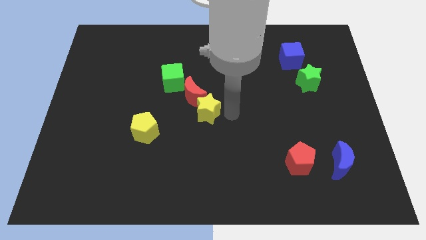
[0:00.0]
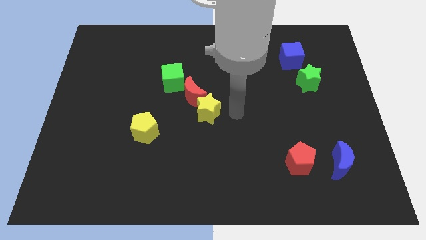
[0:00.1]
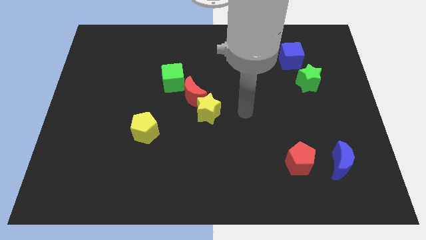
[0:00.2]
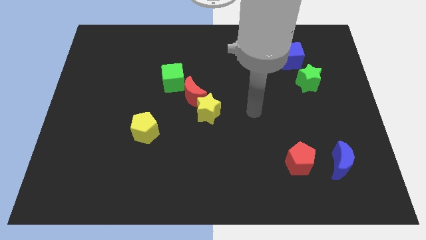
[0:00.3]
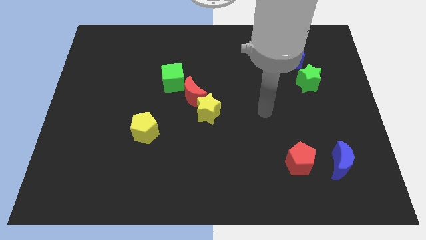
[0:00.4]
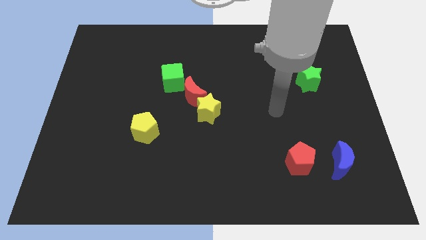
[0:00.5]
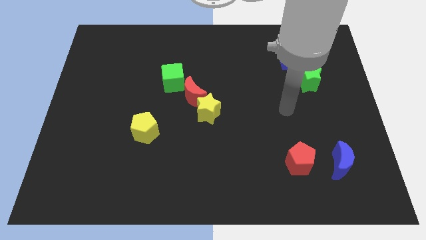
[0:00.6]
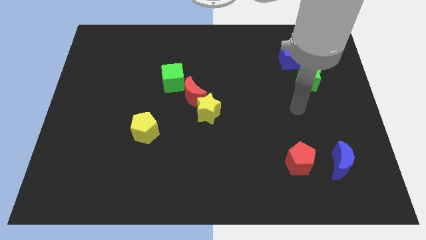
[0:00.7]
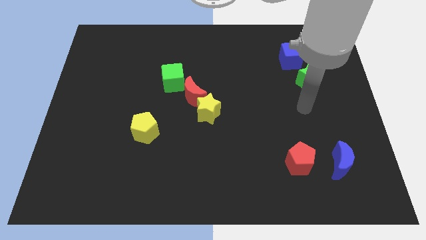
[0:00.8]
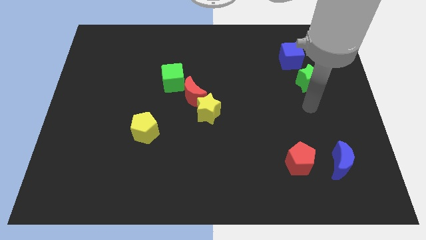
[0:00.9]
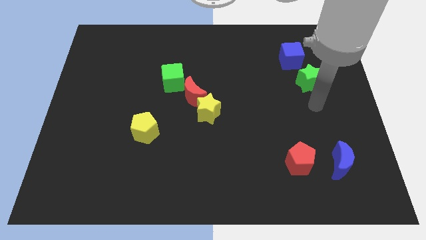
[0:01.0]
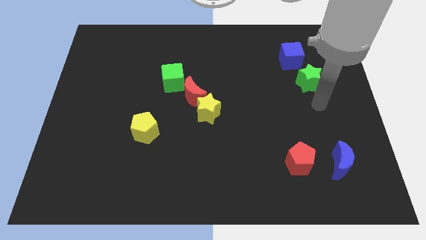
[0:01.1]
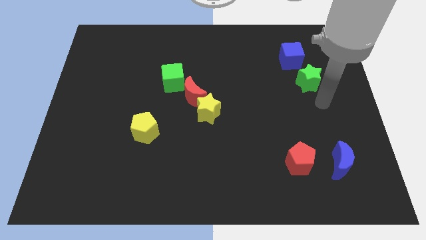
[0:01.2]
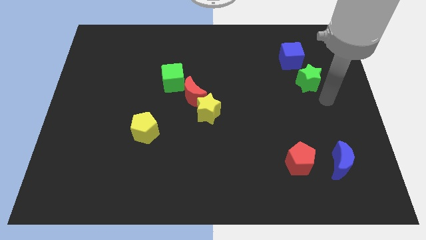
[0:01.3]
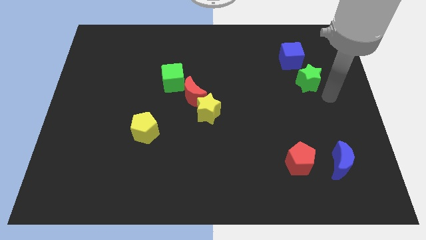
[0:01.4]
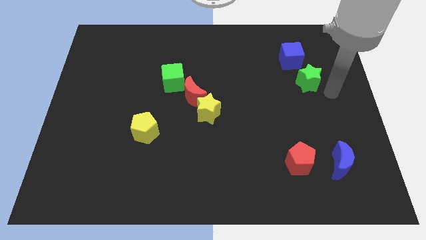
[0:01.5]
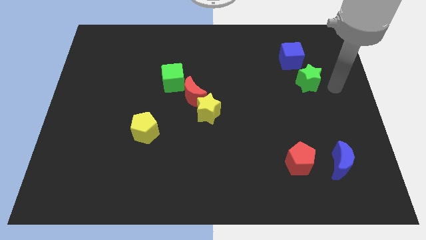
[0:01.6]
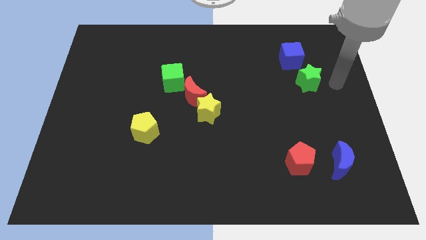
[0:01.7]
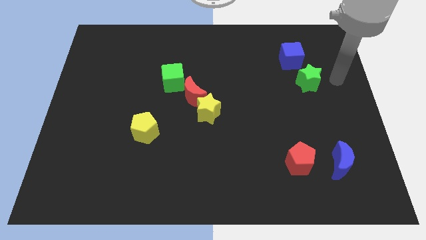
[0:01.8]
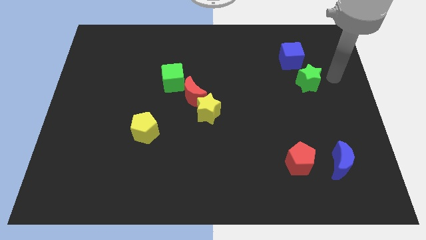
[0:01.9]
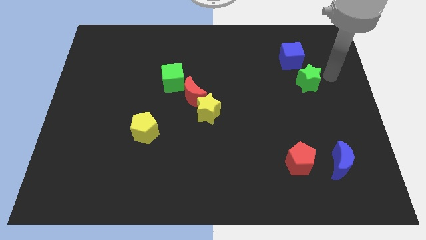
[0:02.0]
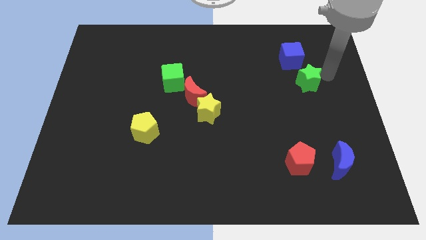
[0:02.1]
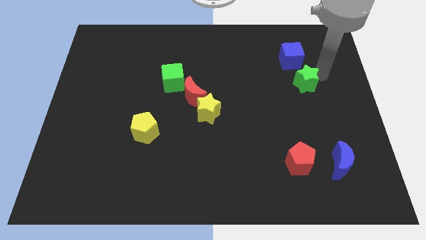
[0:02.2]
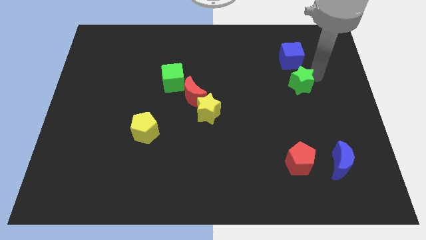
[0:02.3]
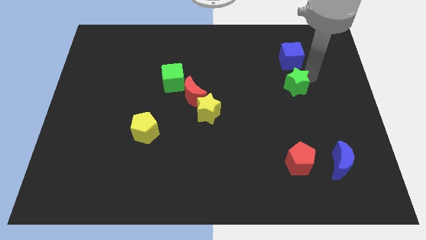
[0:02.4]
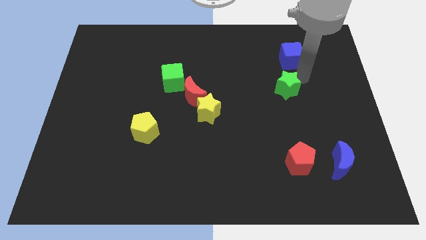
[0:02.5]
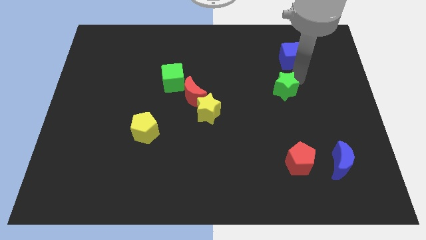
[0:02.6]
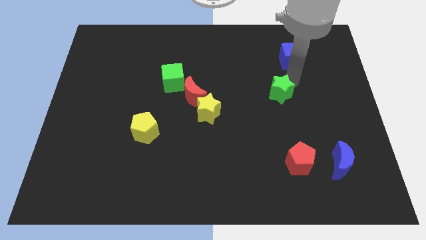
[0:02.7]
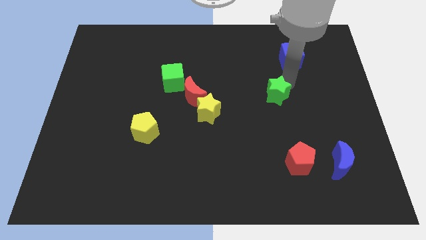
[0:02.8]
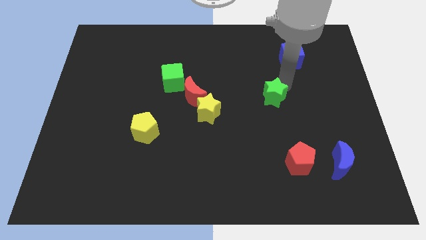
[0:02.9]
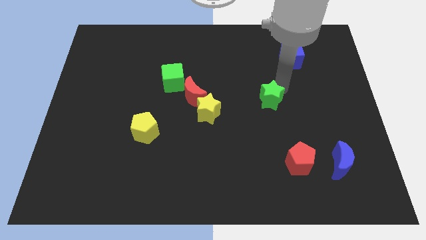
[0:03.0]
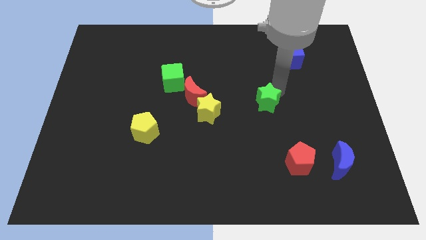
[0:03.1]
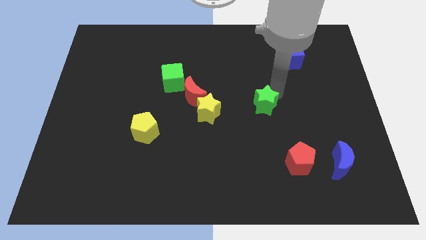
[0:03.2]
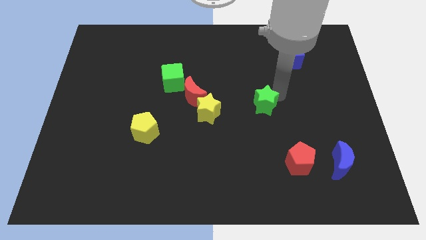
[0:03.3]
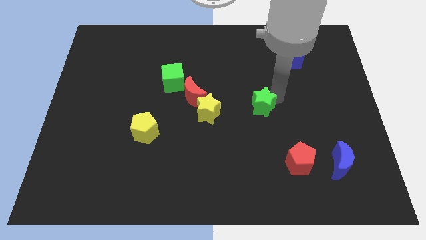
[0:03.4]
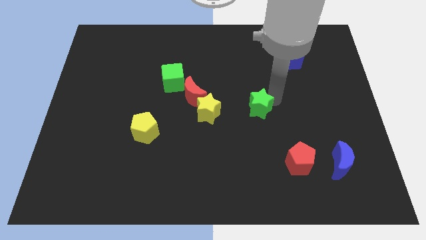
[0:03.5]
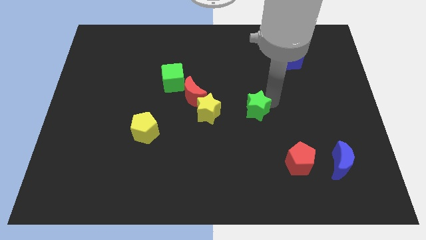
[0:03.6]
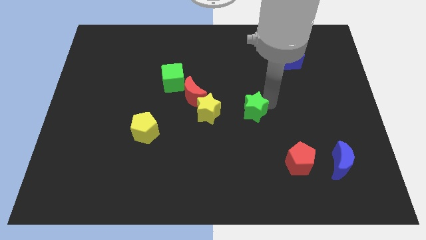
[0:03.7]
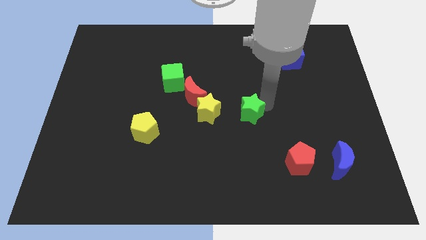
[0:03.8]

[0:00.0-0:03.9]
move the green star to the right of the yellow star

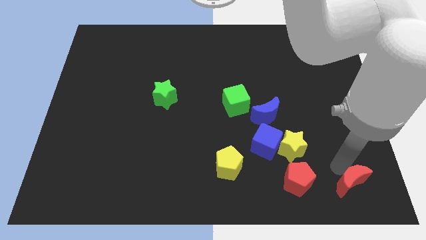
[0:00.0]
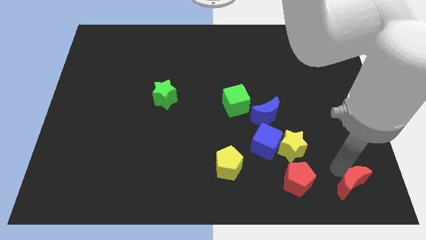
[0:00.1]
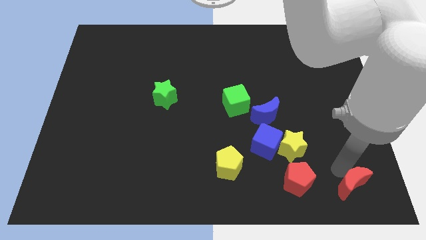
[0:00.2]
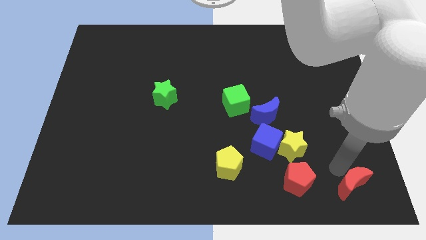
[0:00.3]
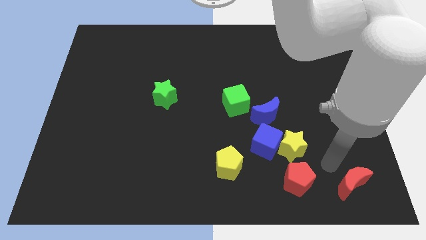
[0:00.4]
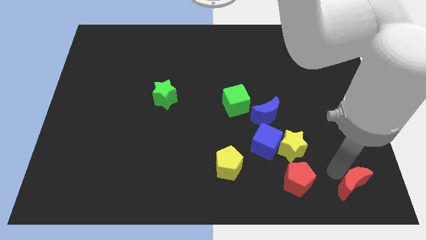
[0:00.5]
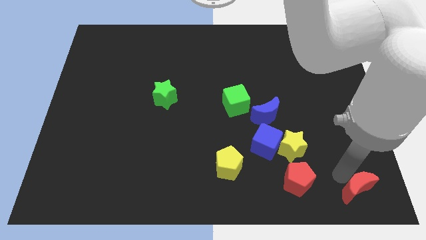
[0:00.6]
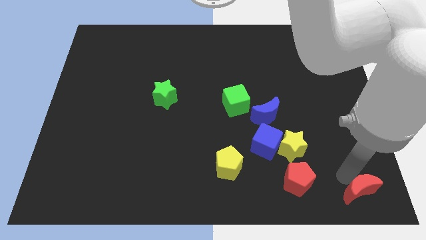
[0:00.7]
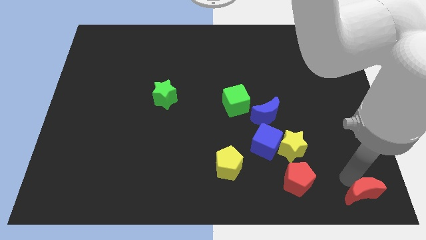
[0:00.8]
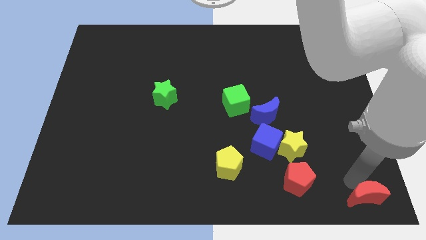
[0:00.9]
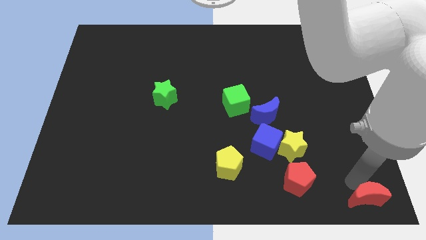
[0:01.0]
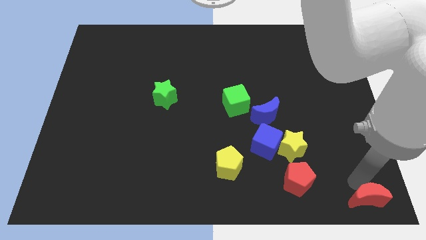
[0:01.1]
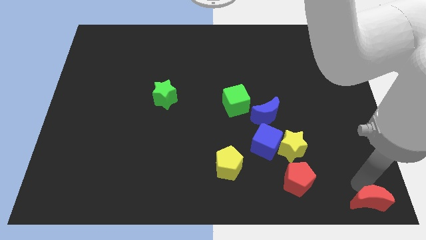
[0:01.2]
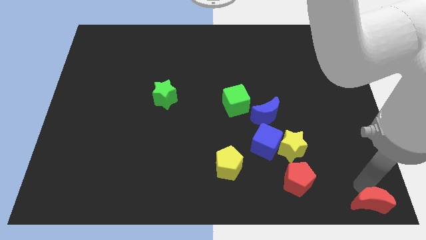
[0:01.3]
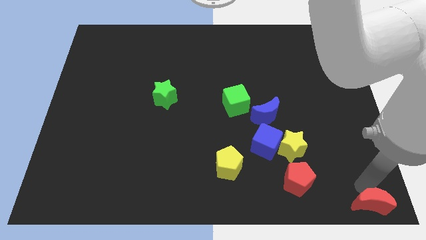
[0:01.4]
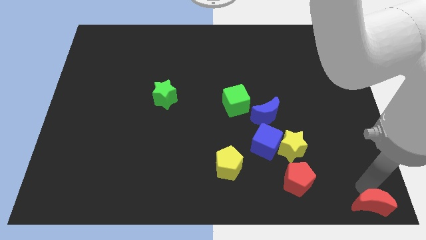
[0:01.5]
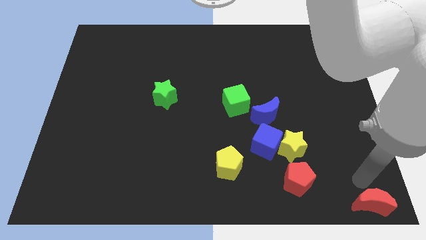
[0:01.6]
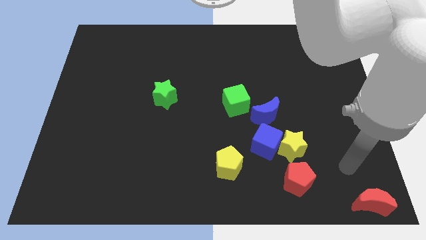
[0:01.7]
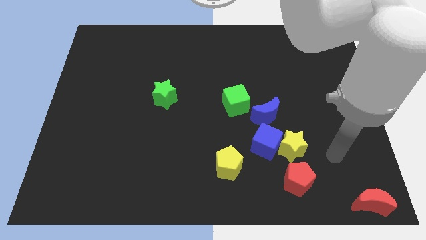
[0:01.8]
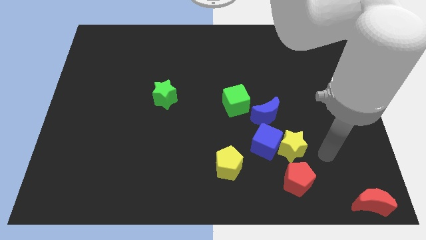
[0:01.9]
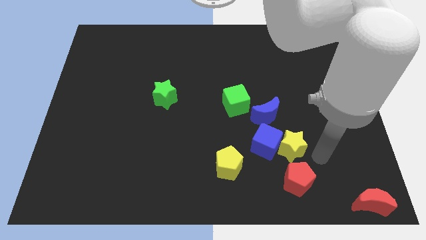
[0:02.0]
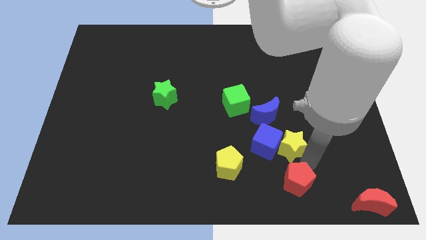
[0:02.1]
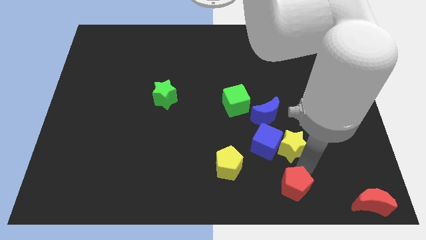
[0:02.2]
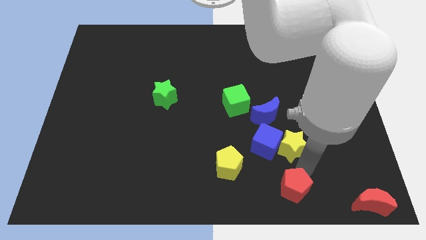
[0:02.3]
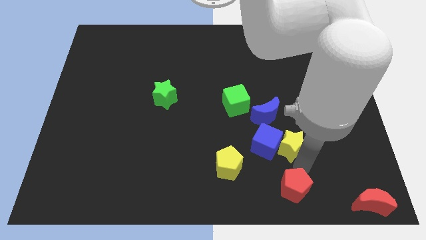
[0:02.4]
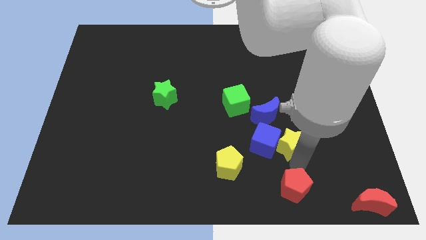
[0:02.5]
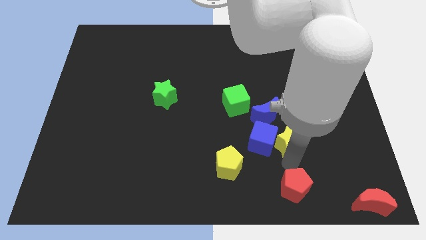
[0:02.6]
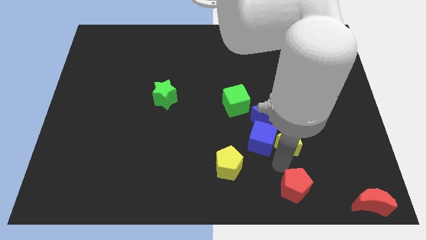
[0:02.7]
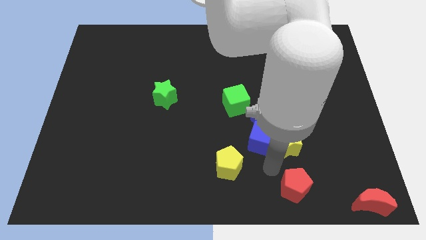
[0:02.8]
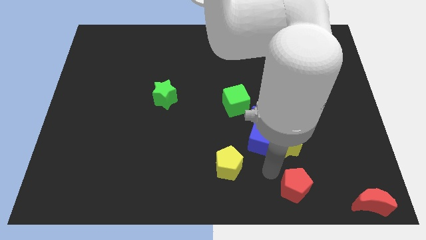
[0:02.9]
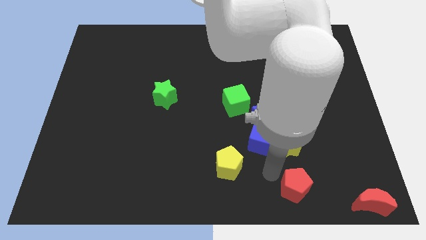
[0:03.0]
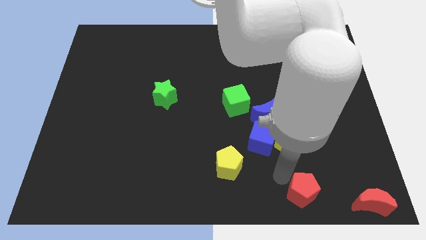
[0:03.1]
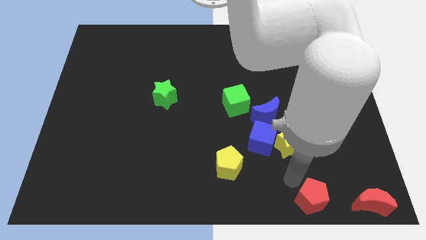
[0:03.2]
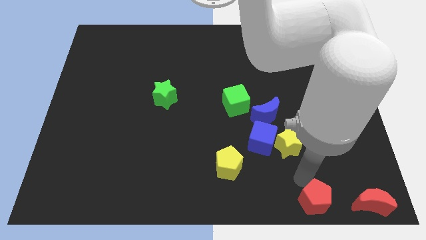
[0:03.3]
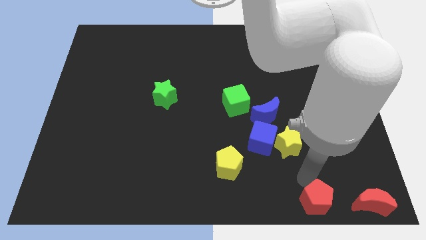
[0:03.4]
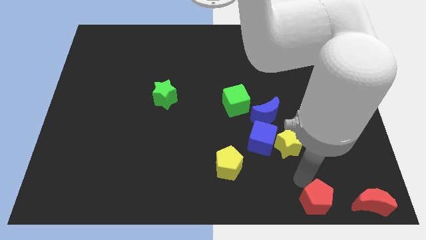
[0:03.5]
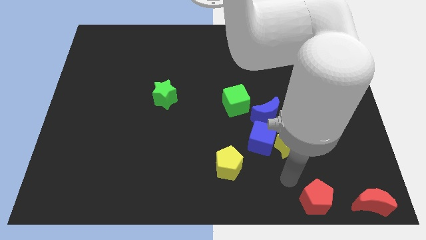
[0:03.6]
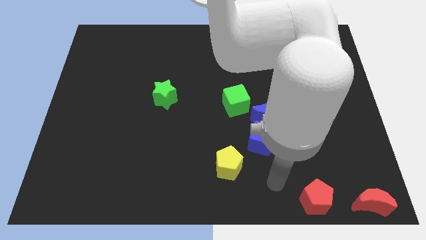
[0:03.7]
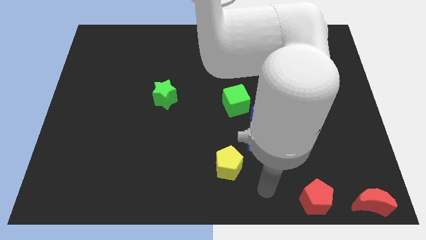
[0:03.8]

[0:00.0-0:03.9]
put the red pentagon and the red moon to the bottom right

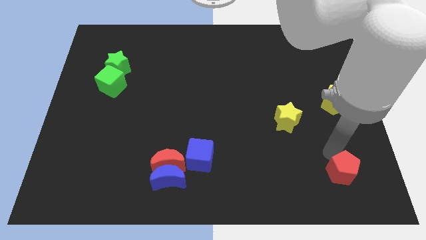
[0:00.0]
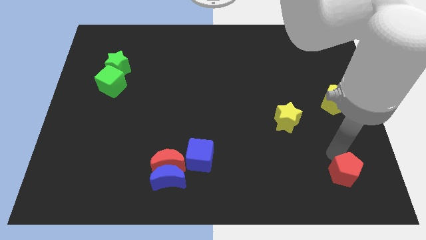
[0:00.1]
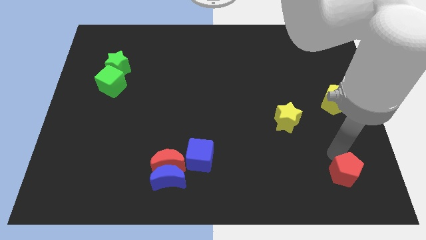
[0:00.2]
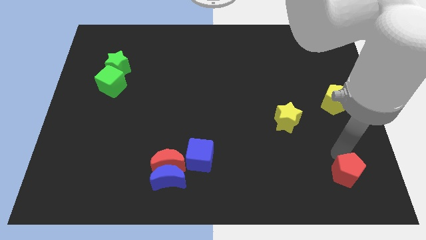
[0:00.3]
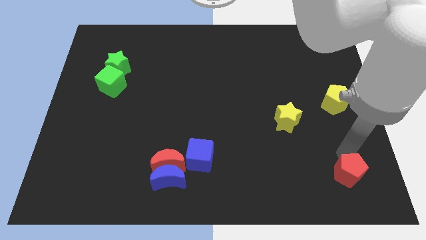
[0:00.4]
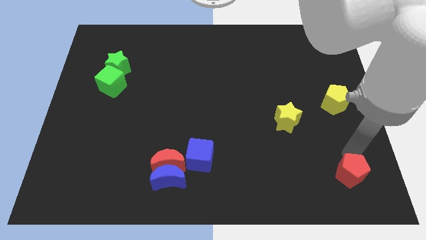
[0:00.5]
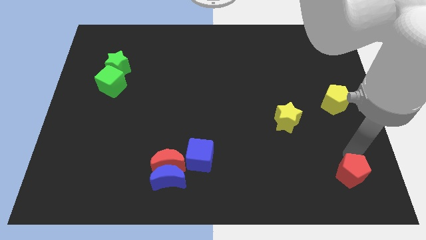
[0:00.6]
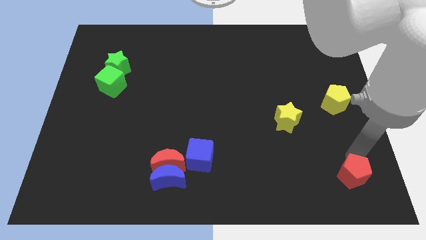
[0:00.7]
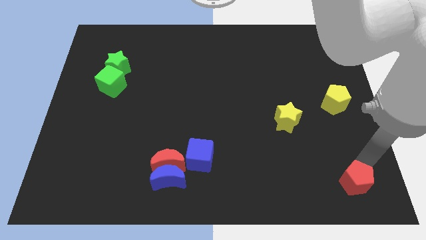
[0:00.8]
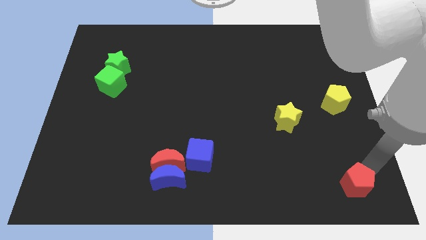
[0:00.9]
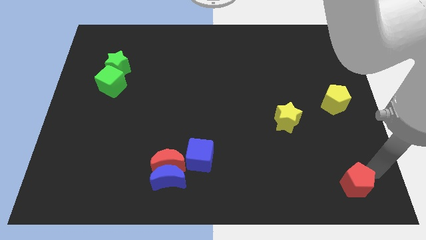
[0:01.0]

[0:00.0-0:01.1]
push the red pentagon towards the bottom corner of the board

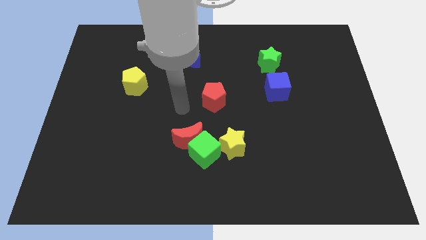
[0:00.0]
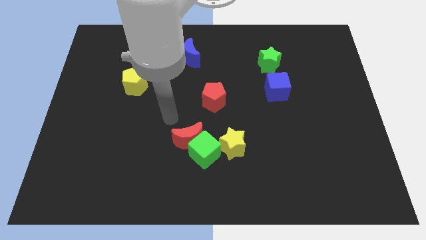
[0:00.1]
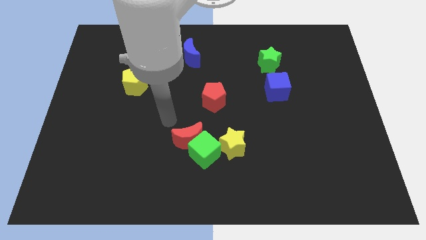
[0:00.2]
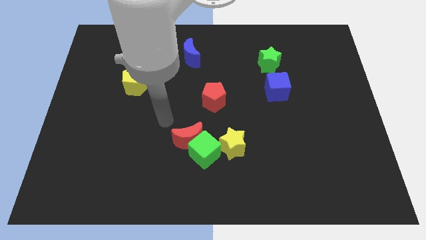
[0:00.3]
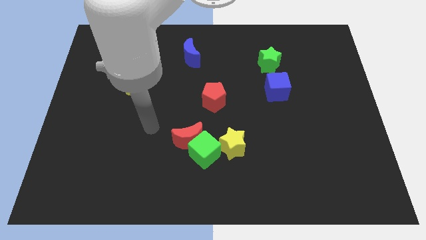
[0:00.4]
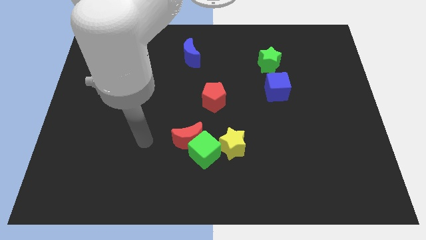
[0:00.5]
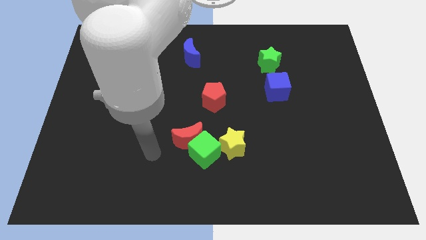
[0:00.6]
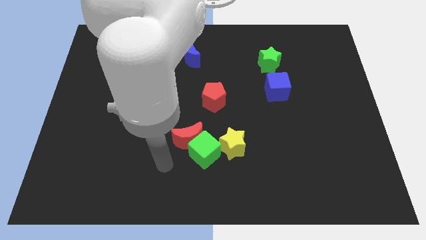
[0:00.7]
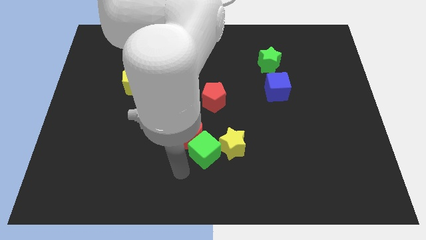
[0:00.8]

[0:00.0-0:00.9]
move the arm to the green cube
